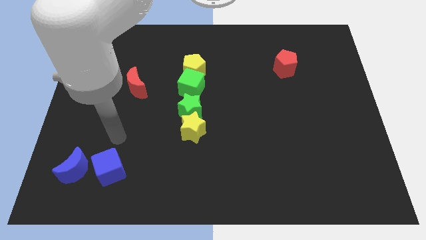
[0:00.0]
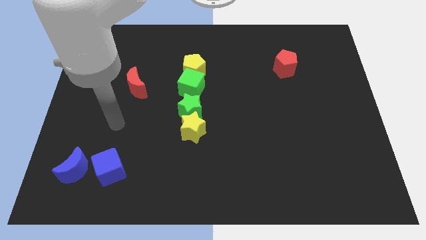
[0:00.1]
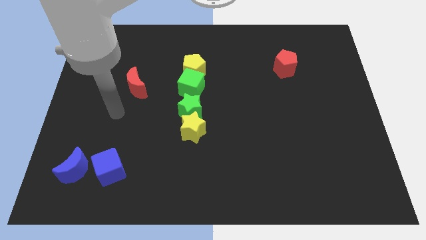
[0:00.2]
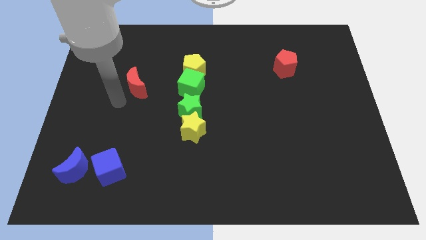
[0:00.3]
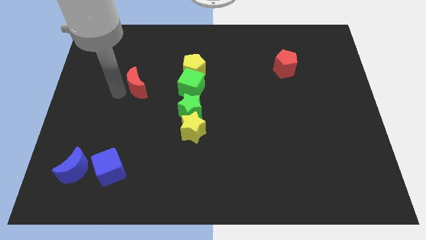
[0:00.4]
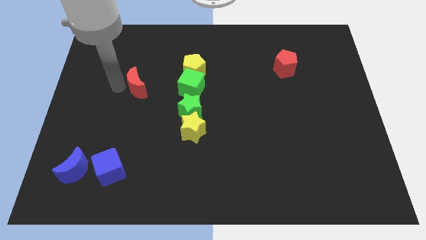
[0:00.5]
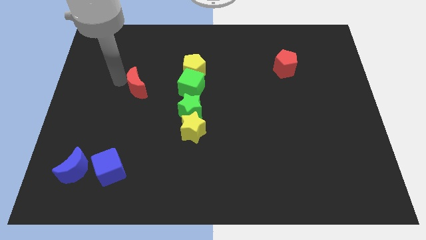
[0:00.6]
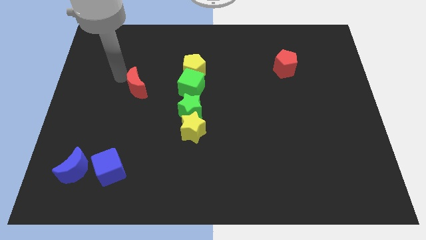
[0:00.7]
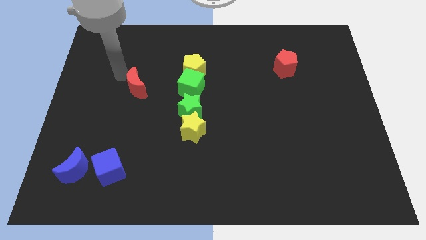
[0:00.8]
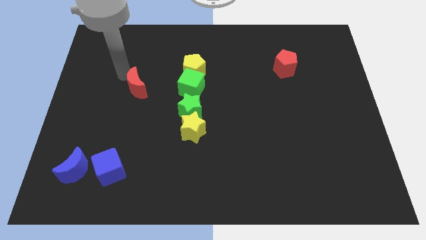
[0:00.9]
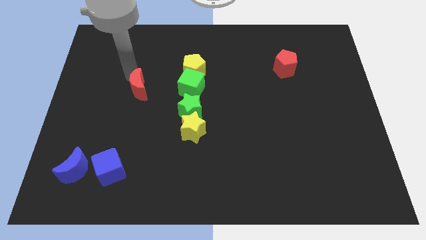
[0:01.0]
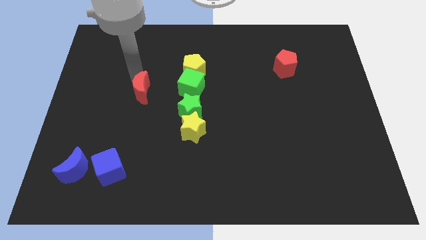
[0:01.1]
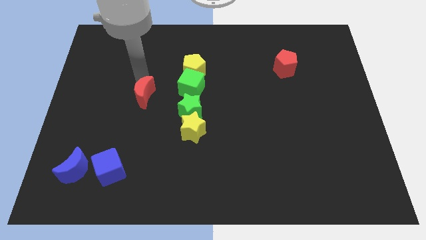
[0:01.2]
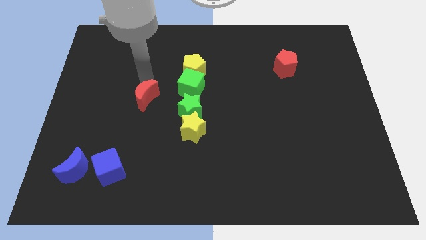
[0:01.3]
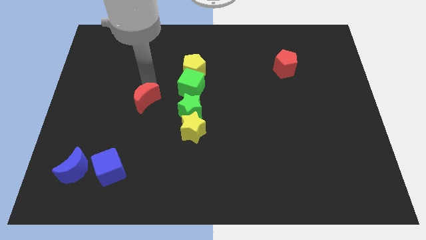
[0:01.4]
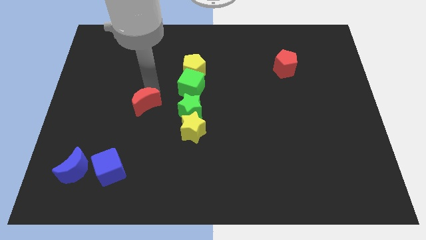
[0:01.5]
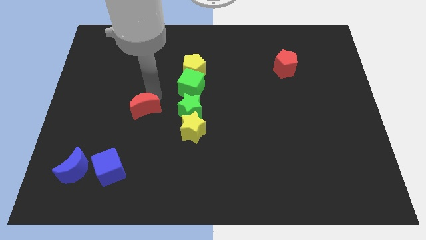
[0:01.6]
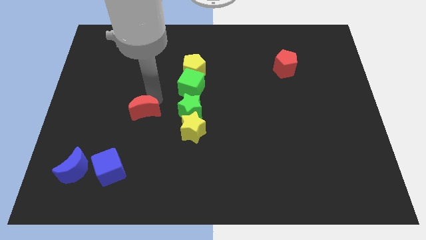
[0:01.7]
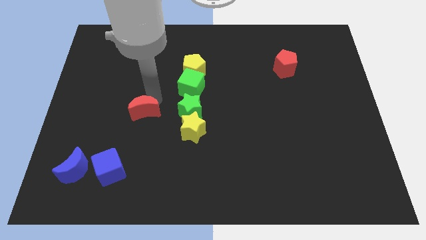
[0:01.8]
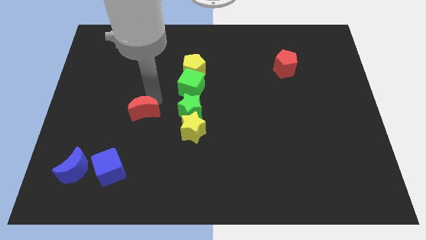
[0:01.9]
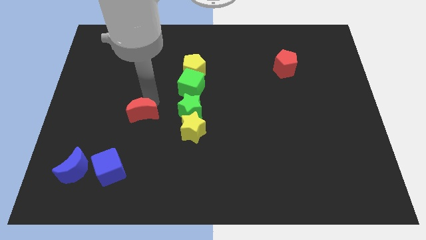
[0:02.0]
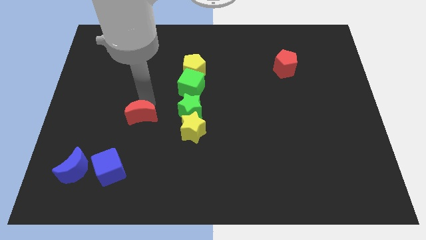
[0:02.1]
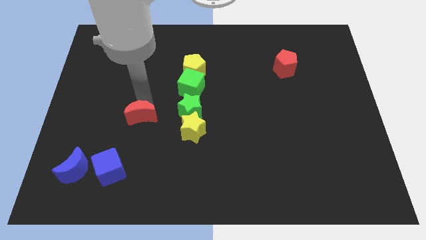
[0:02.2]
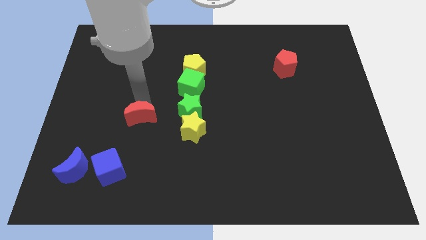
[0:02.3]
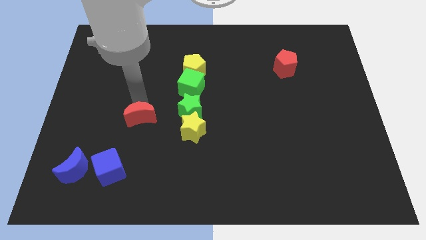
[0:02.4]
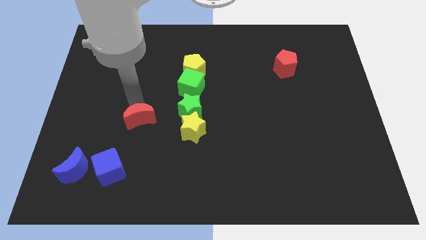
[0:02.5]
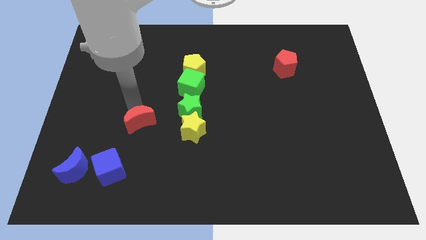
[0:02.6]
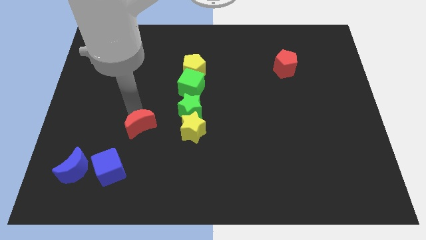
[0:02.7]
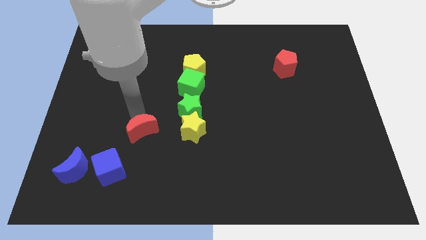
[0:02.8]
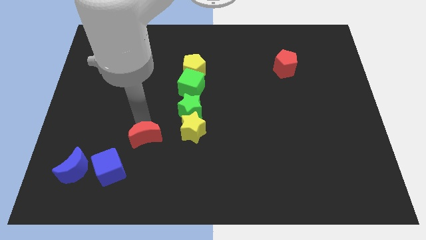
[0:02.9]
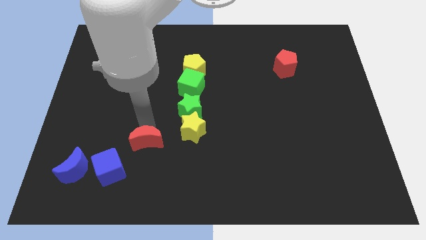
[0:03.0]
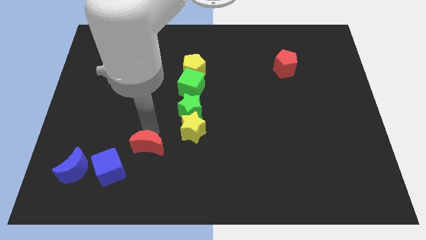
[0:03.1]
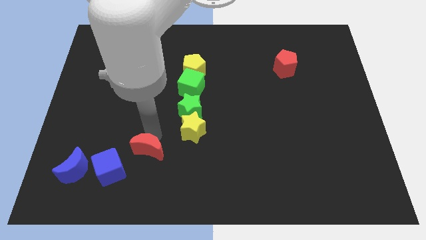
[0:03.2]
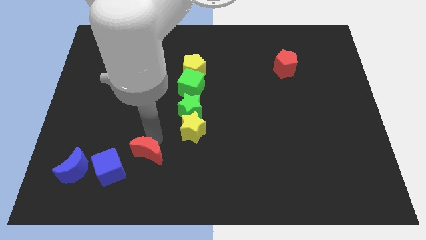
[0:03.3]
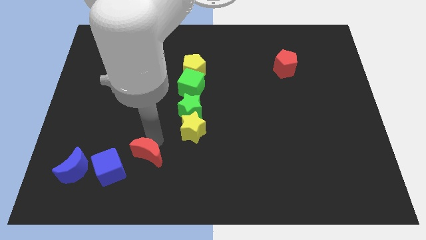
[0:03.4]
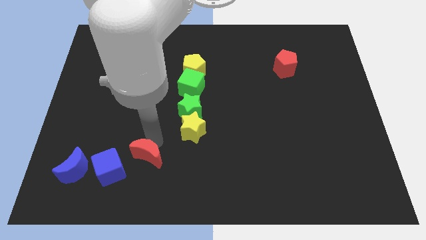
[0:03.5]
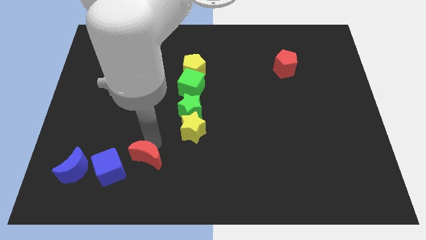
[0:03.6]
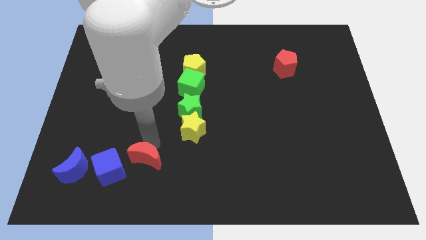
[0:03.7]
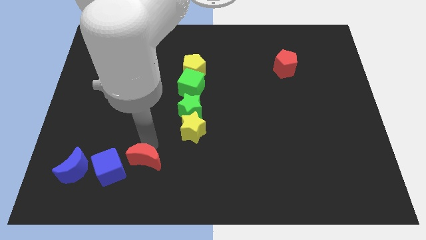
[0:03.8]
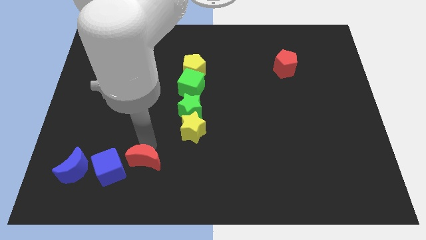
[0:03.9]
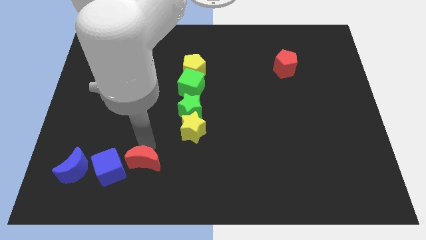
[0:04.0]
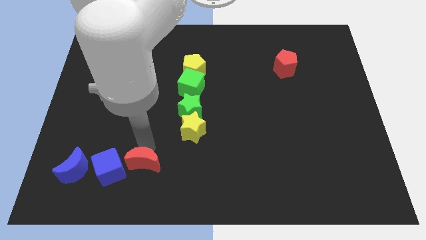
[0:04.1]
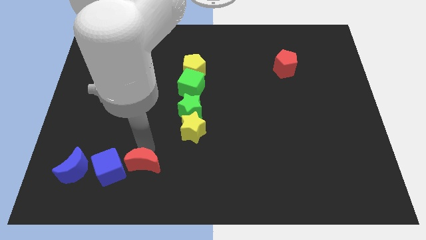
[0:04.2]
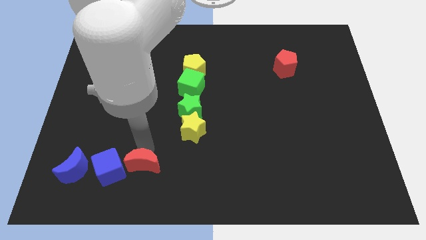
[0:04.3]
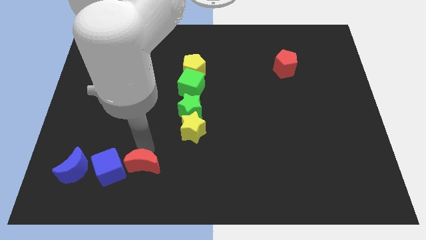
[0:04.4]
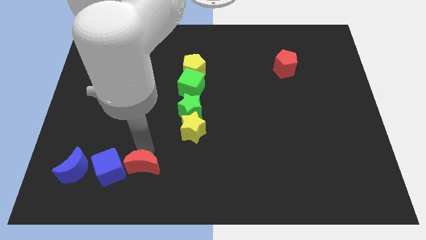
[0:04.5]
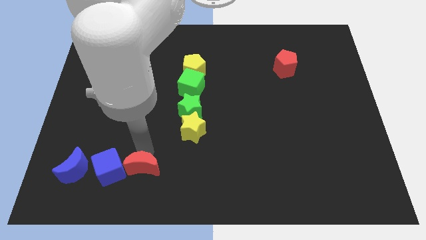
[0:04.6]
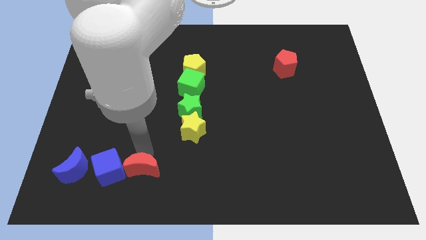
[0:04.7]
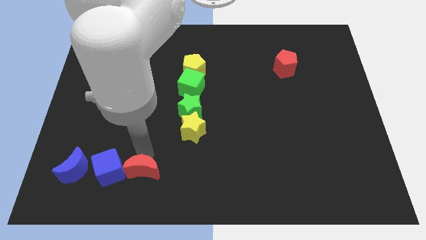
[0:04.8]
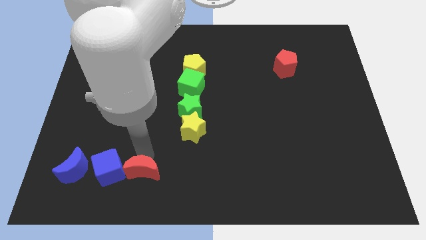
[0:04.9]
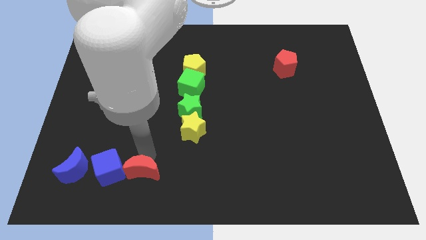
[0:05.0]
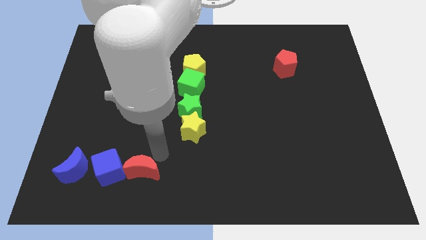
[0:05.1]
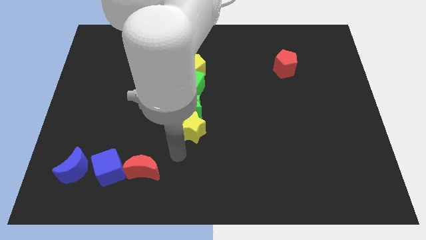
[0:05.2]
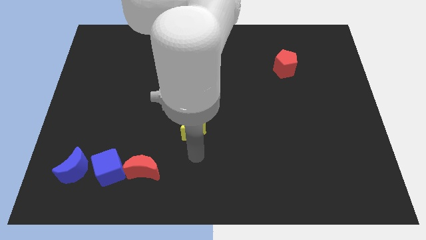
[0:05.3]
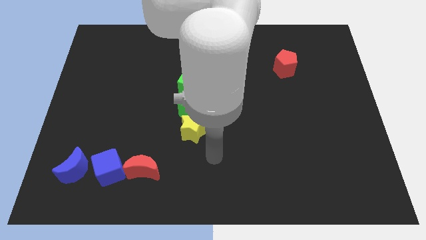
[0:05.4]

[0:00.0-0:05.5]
slide the red moon to the right side of the blue cube

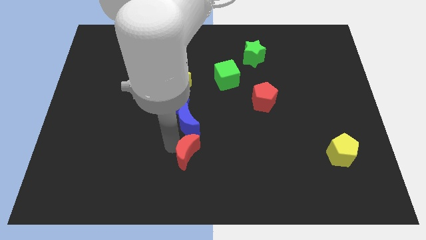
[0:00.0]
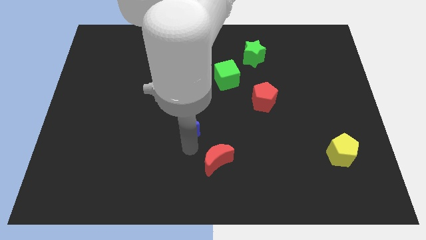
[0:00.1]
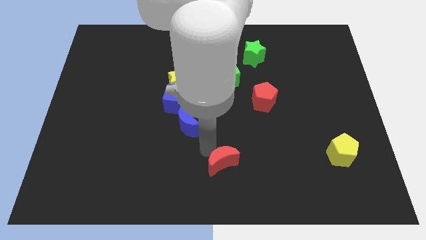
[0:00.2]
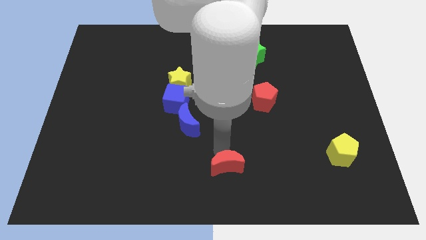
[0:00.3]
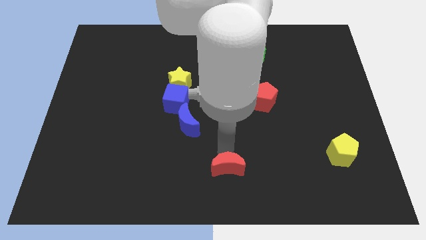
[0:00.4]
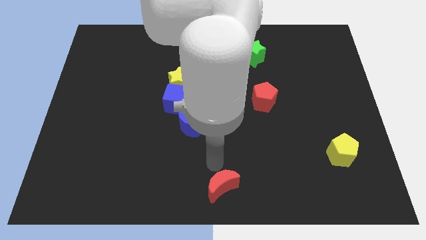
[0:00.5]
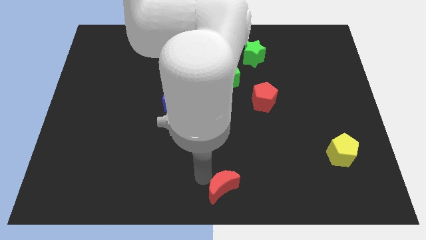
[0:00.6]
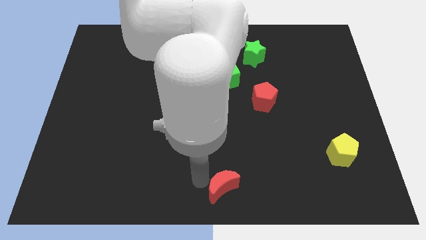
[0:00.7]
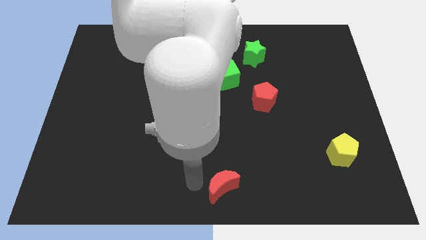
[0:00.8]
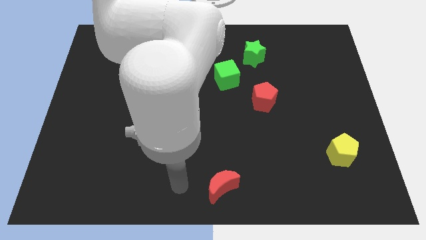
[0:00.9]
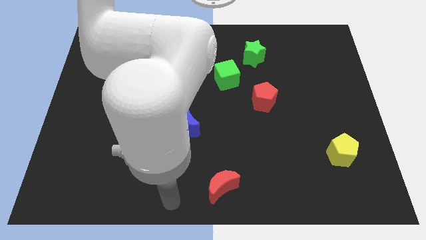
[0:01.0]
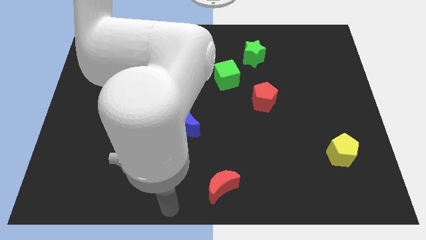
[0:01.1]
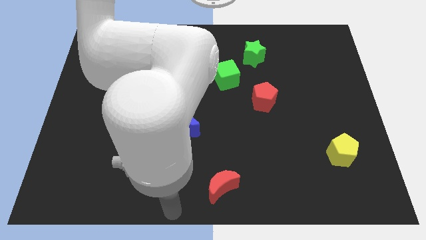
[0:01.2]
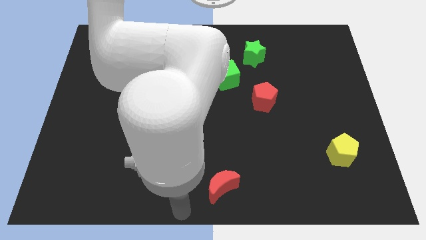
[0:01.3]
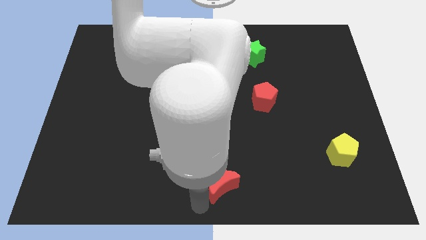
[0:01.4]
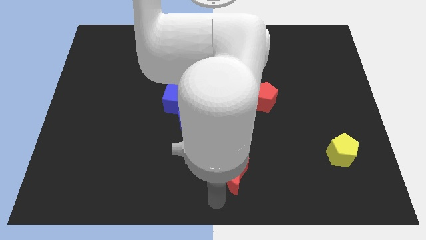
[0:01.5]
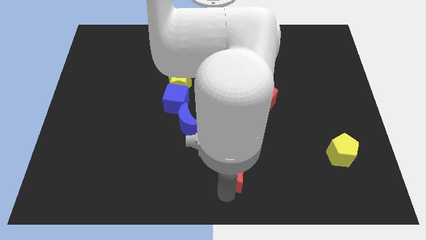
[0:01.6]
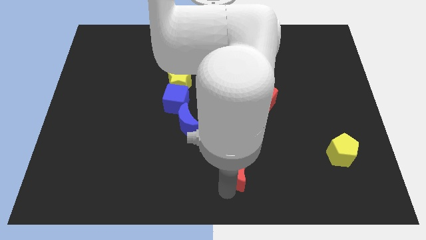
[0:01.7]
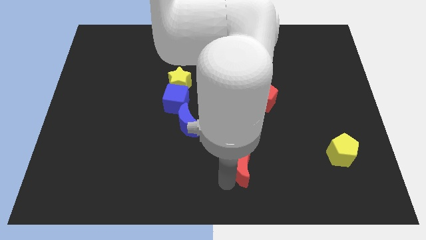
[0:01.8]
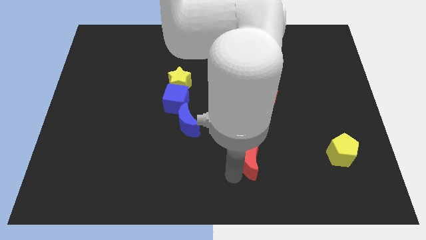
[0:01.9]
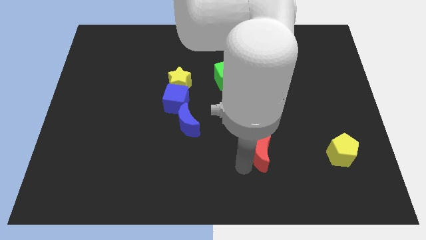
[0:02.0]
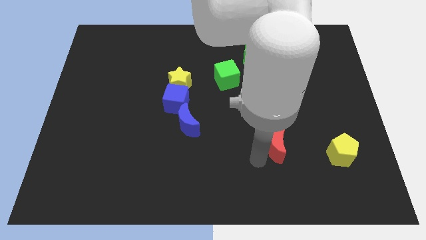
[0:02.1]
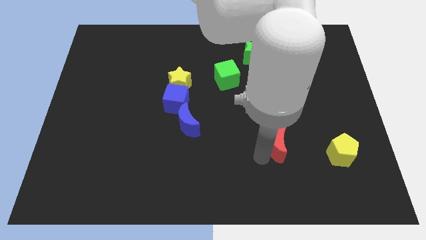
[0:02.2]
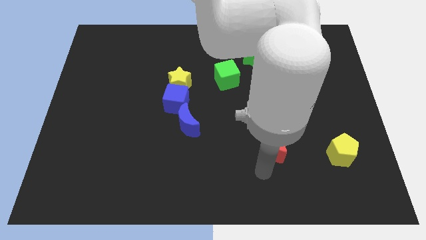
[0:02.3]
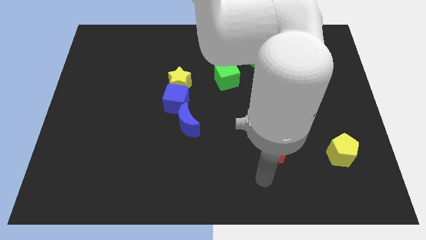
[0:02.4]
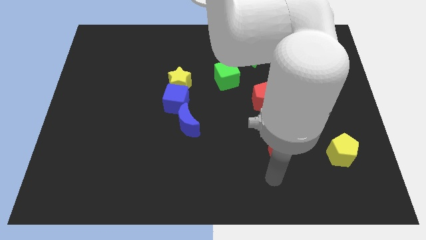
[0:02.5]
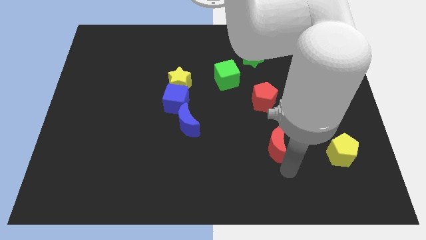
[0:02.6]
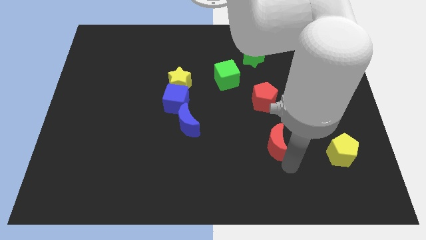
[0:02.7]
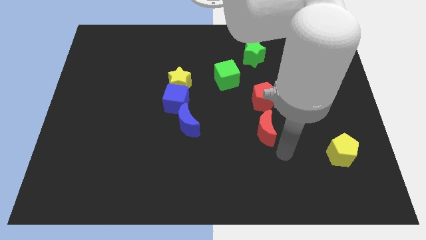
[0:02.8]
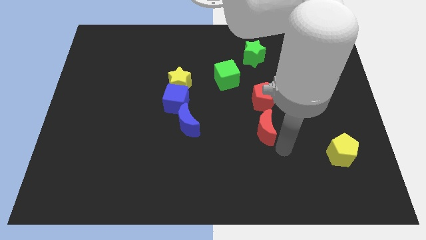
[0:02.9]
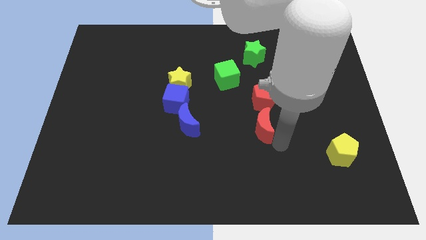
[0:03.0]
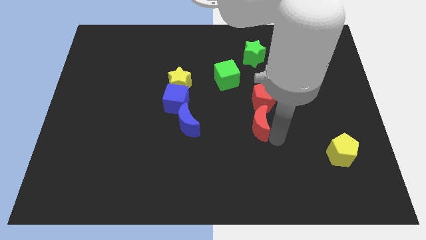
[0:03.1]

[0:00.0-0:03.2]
push the red crescent bottom to the red pentagon

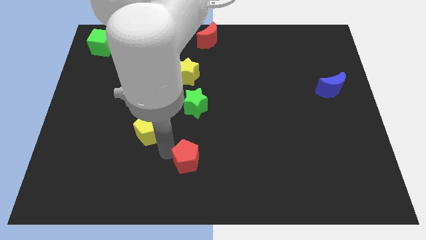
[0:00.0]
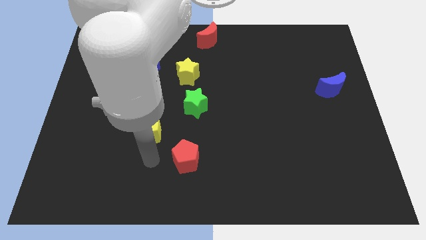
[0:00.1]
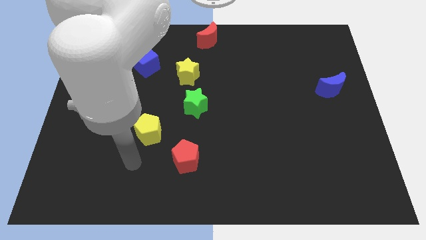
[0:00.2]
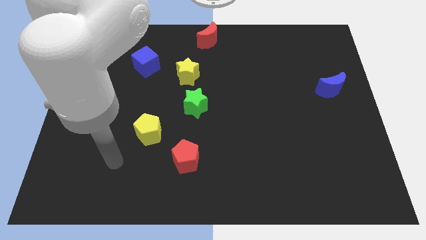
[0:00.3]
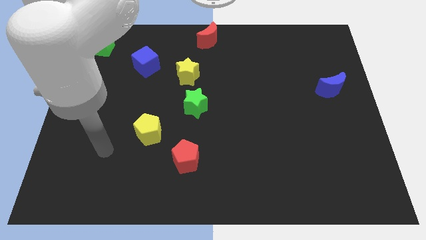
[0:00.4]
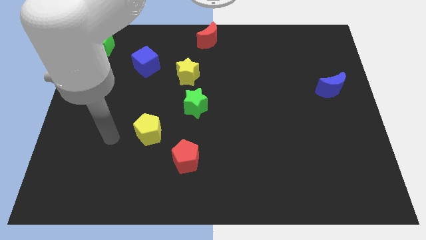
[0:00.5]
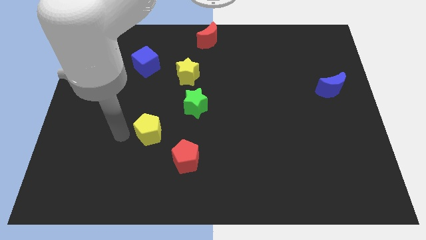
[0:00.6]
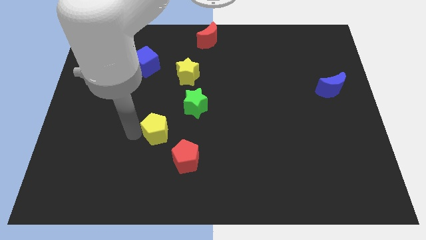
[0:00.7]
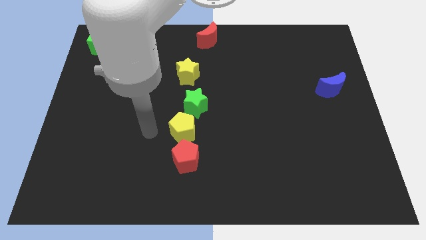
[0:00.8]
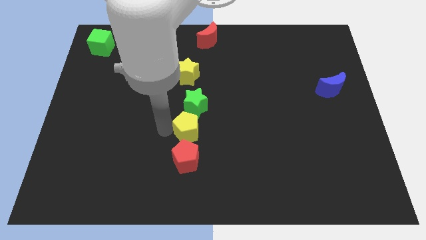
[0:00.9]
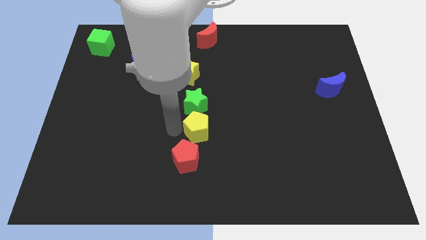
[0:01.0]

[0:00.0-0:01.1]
move the yellow pentagon to the bottom of the green star
